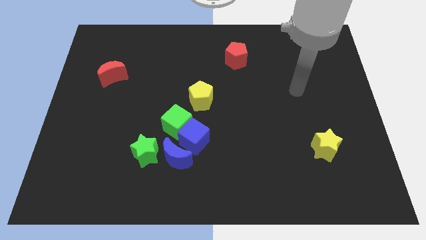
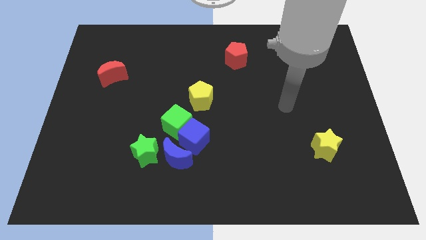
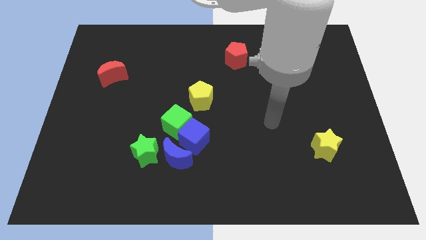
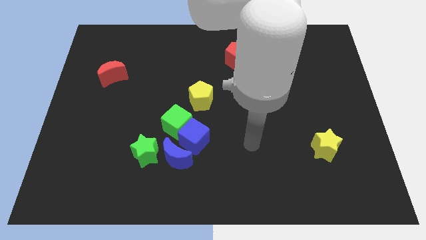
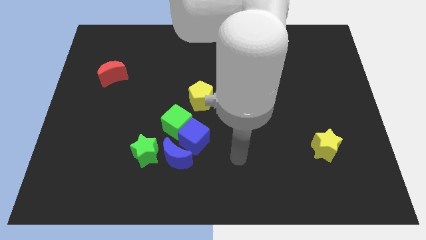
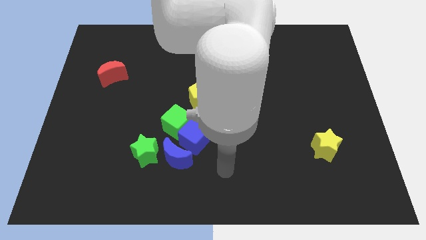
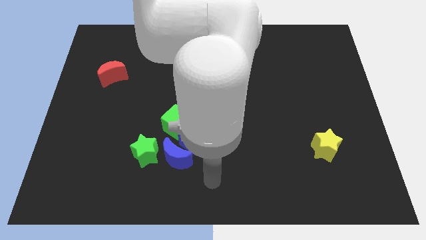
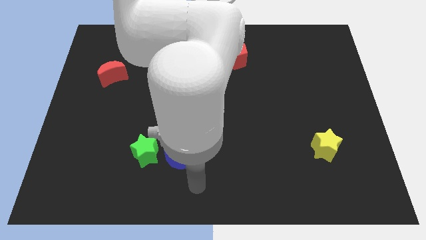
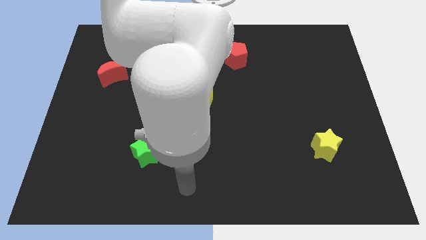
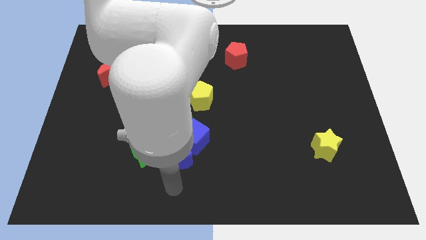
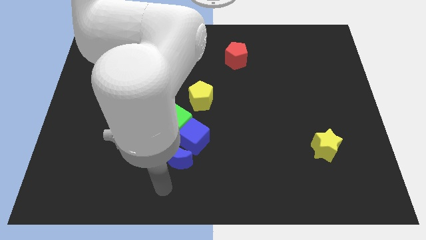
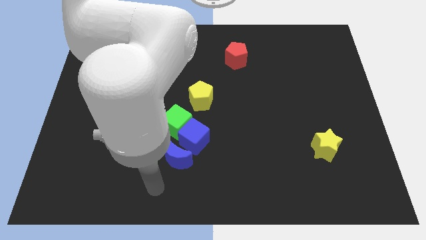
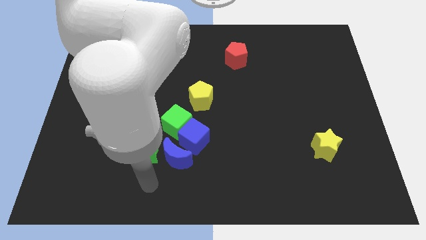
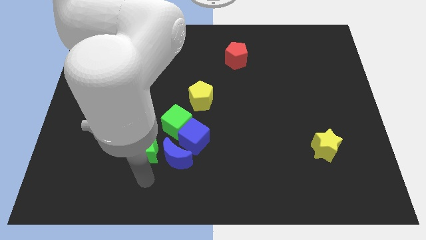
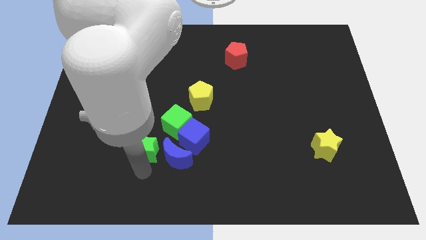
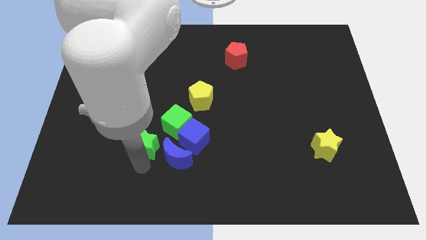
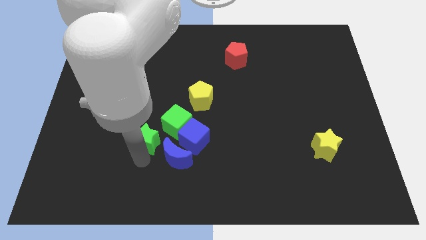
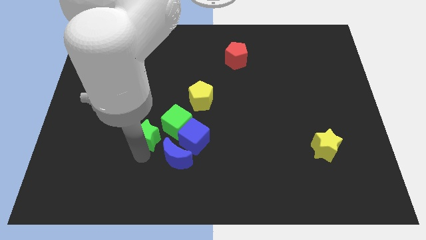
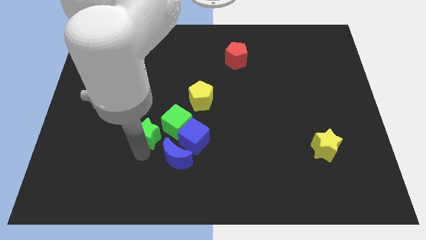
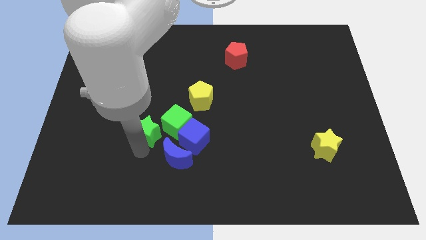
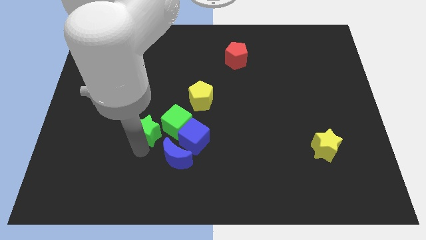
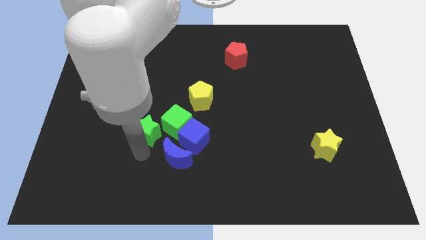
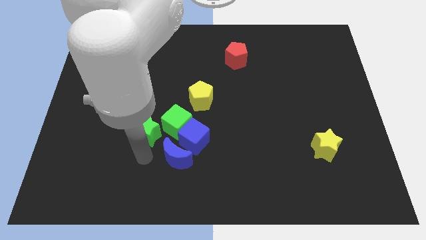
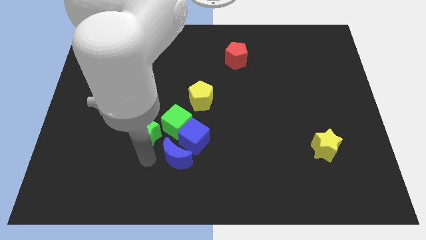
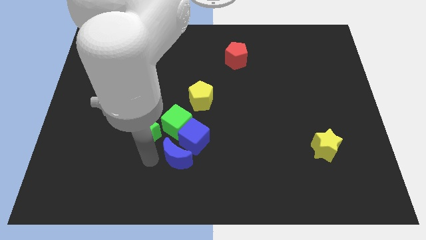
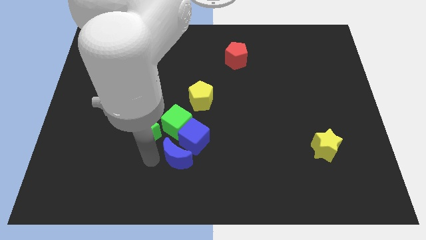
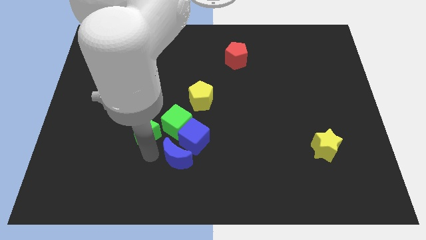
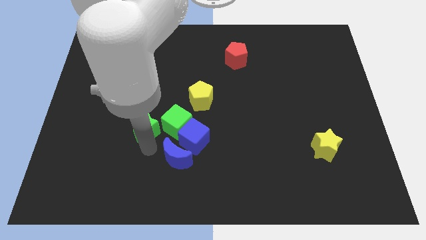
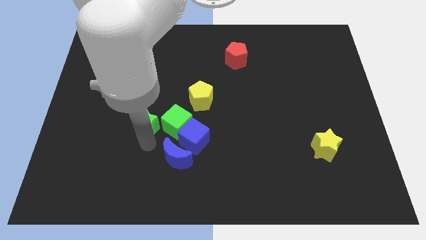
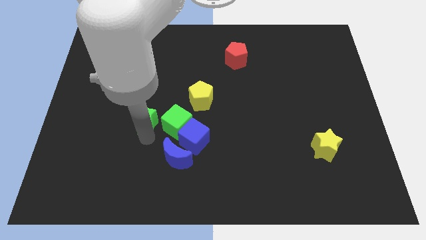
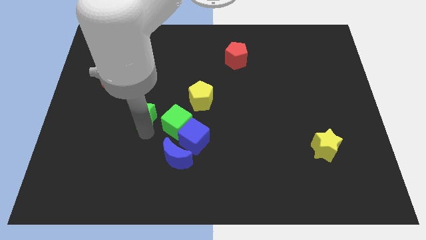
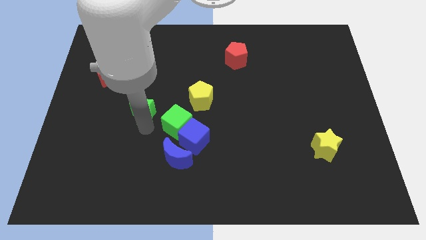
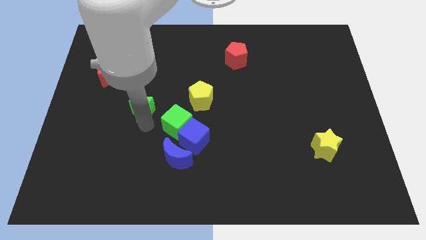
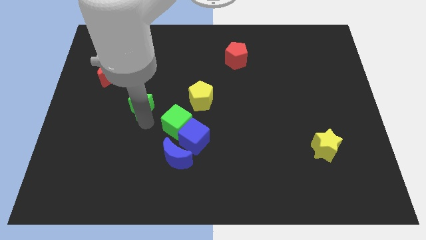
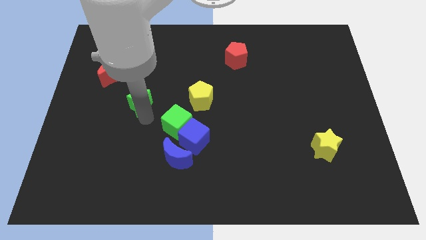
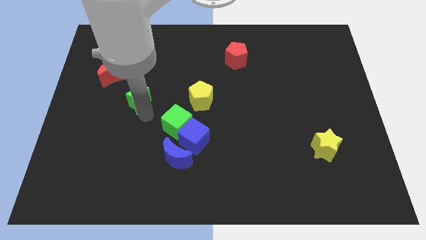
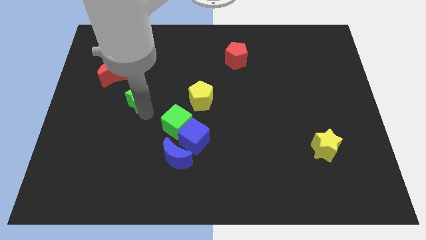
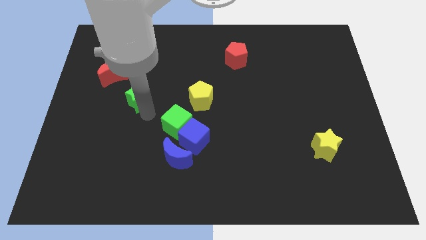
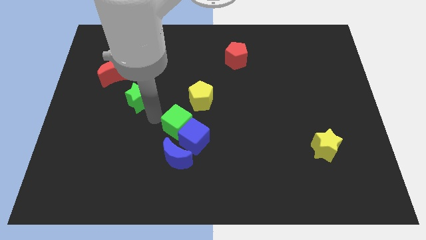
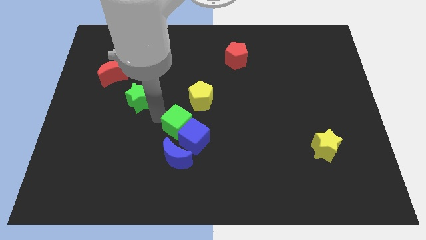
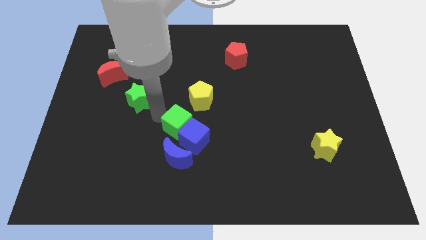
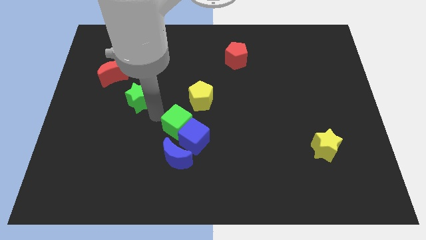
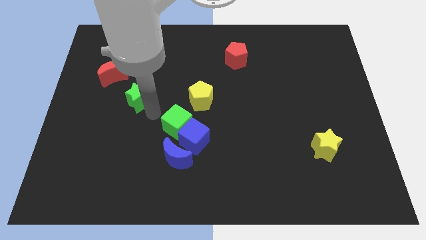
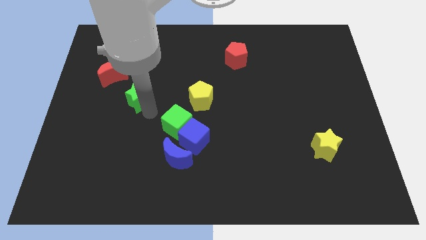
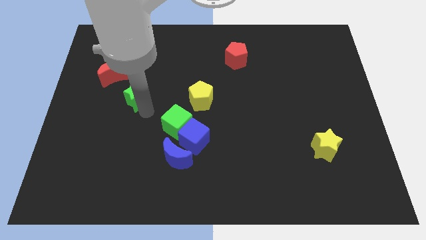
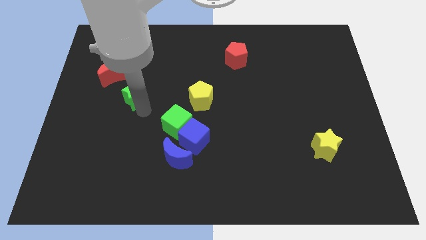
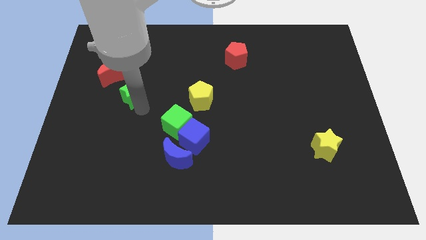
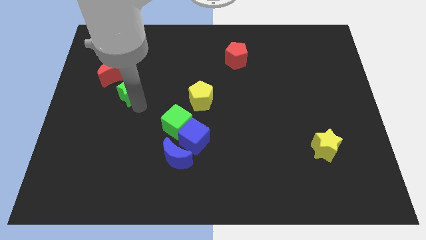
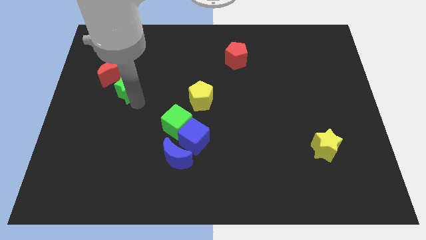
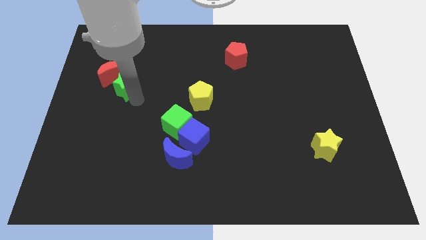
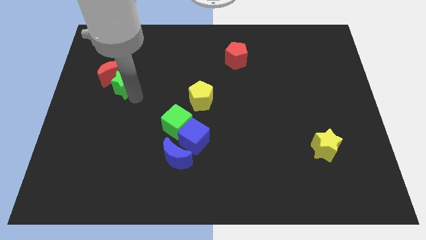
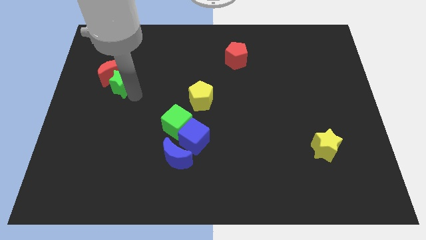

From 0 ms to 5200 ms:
push the green star next to the red moon

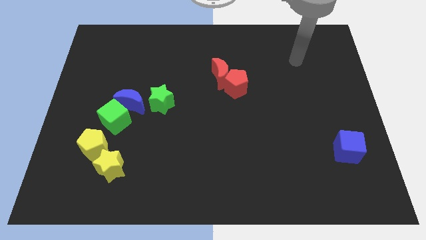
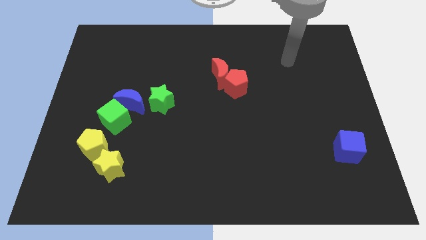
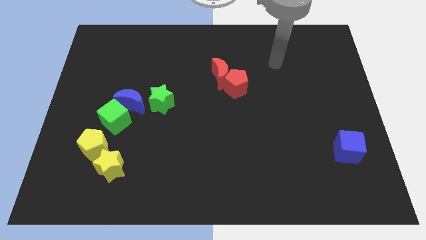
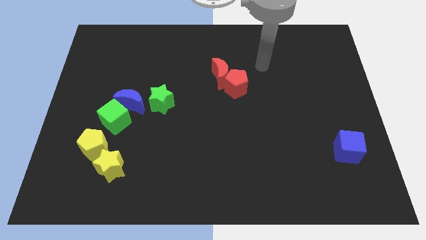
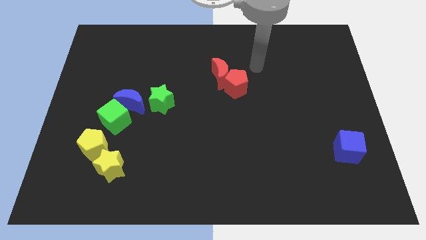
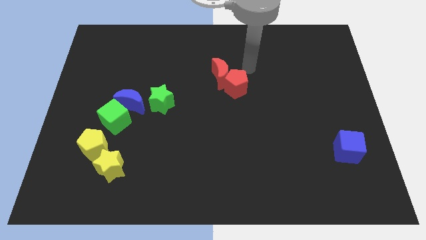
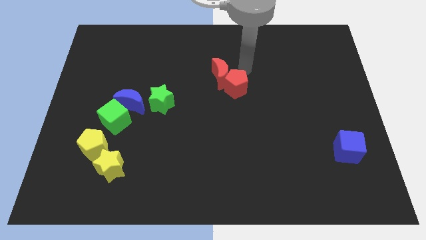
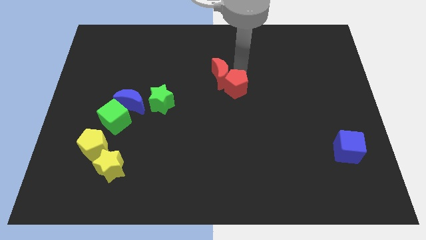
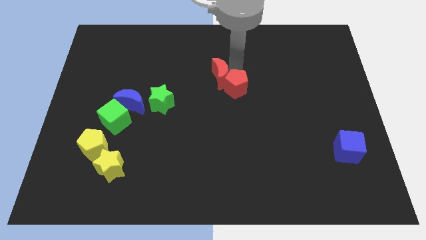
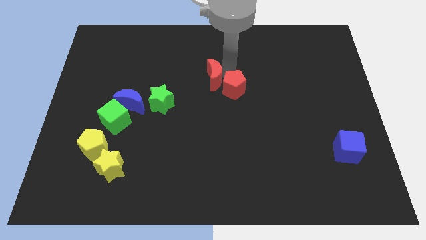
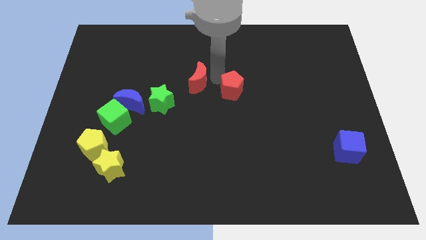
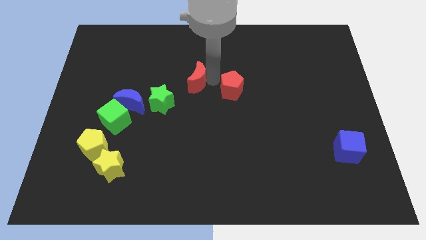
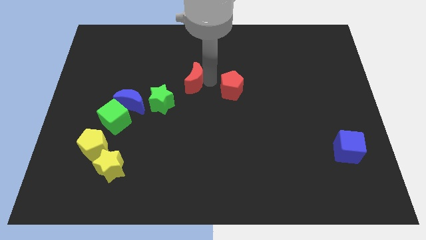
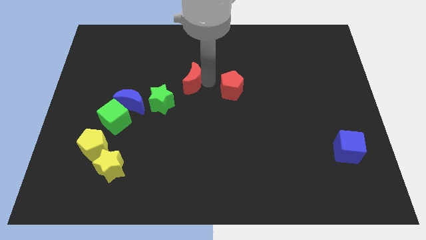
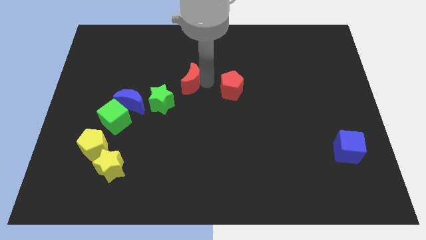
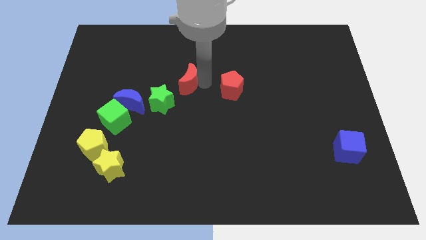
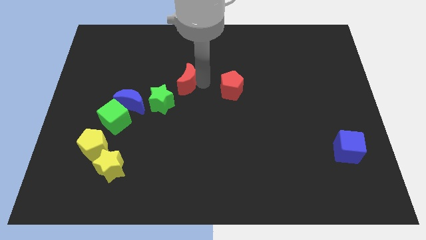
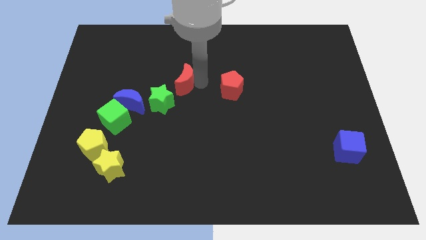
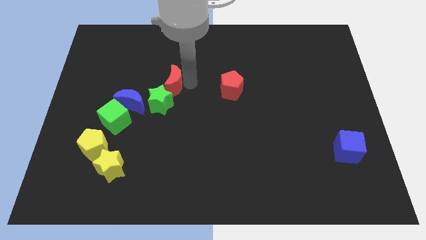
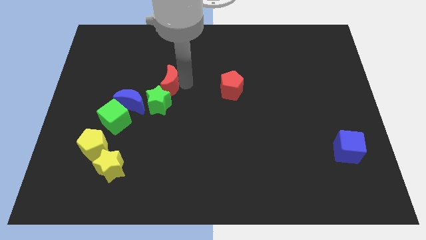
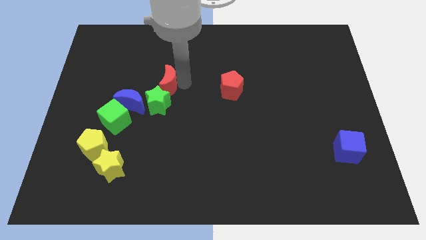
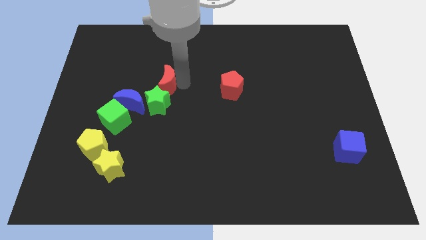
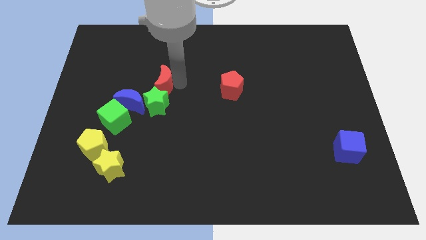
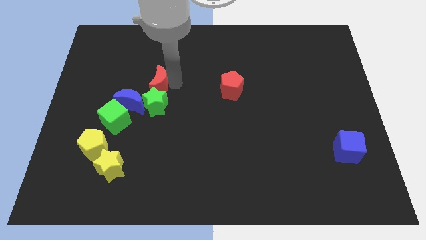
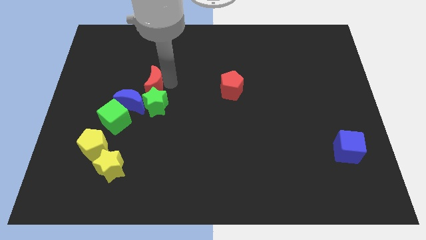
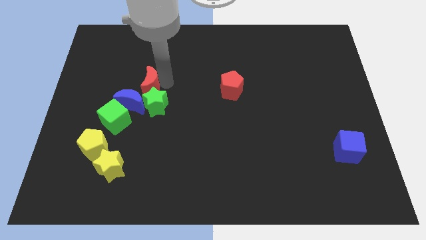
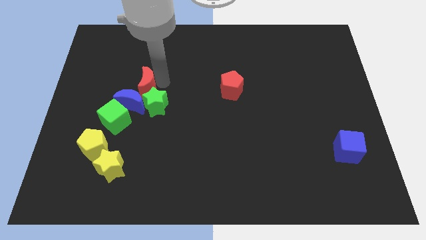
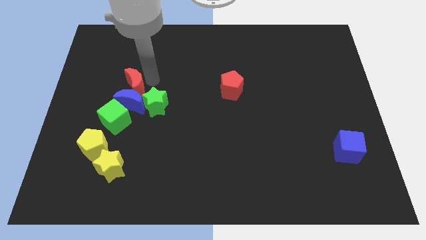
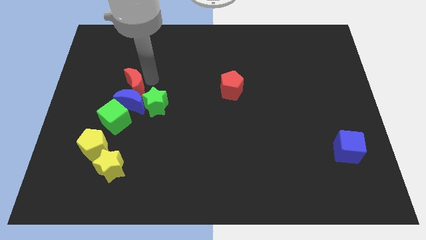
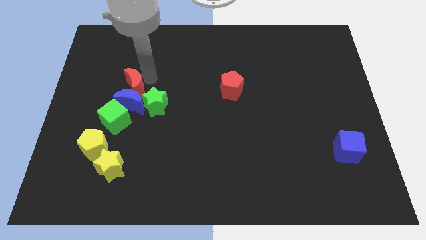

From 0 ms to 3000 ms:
slide the red moon towards the blue moon

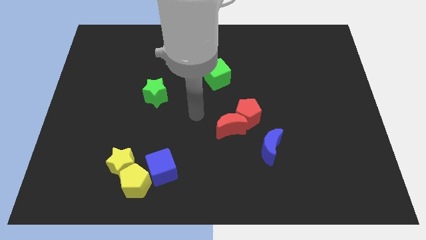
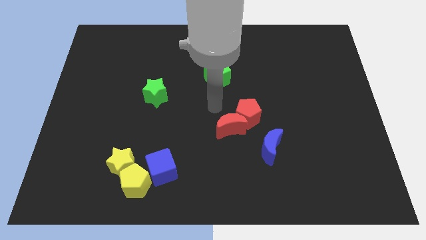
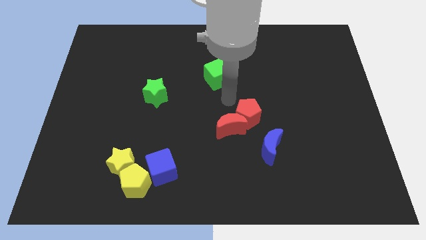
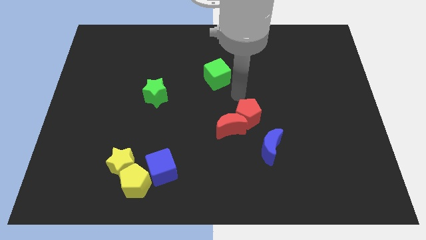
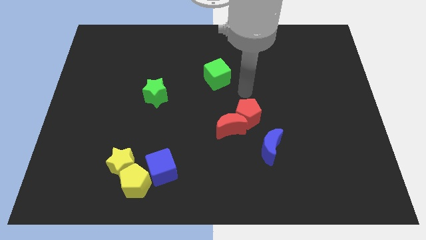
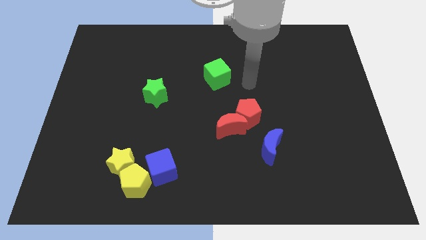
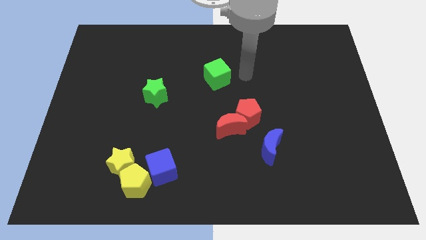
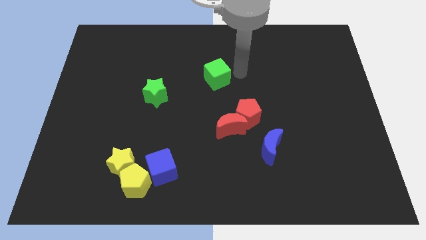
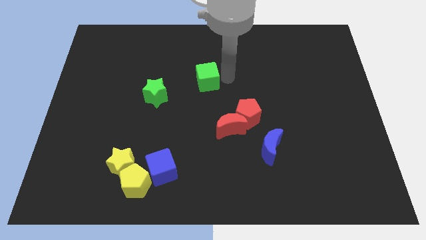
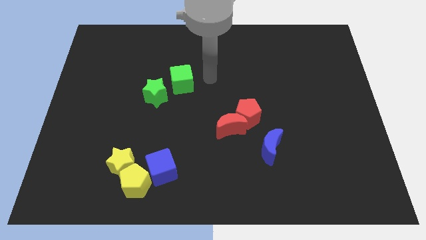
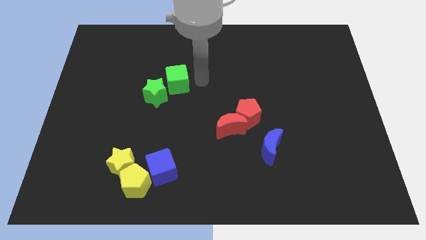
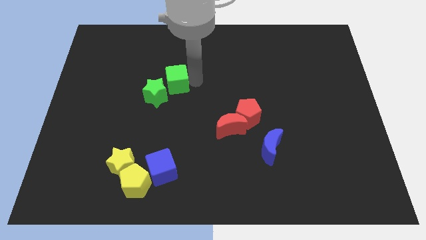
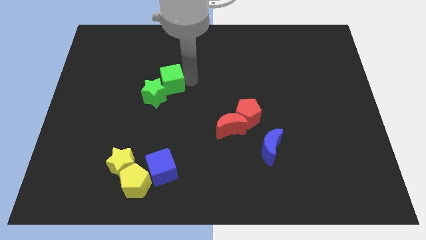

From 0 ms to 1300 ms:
push the green cube next to the green star
